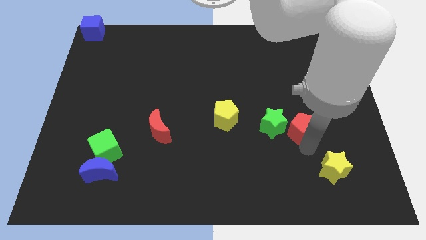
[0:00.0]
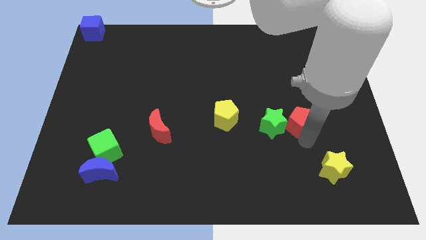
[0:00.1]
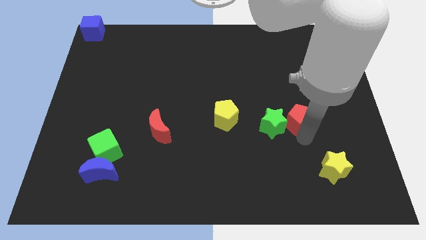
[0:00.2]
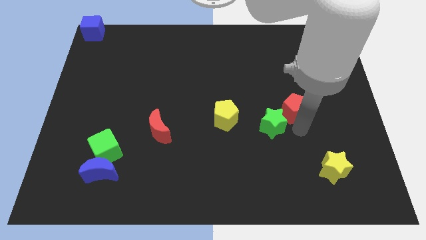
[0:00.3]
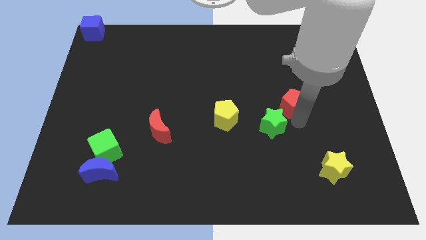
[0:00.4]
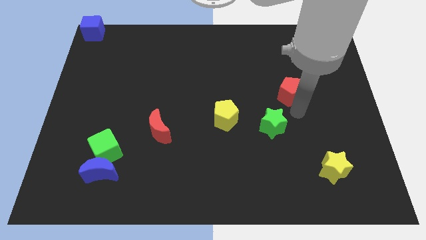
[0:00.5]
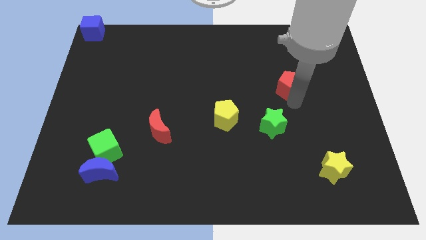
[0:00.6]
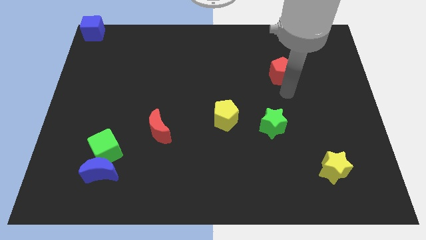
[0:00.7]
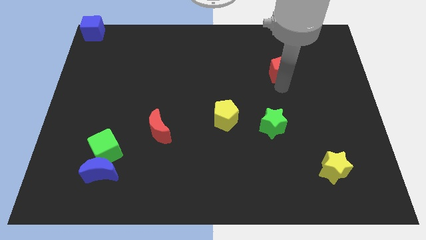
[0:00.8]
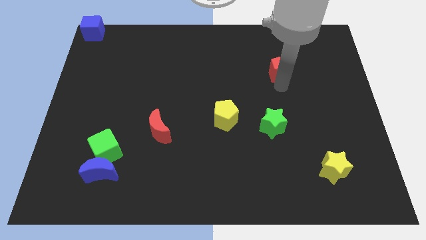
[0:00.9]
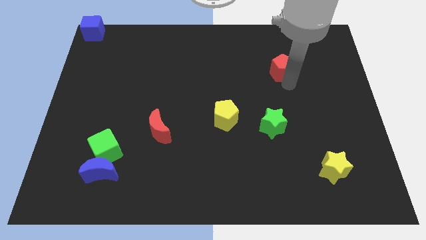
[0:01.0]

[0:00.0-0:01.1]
slide the red pentagon slightly upwards

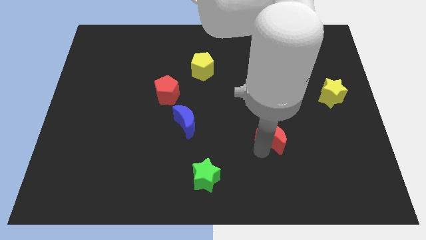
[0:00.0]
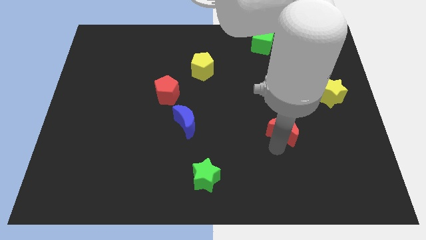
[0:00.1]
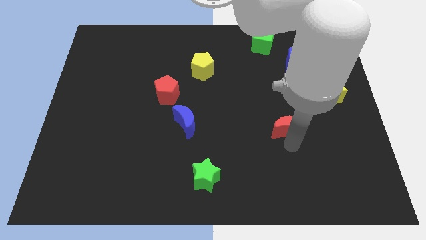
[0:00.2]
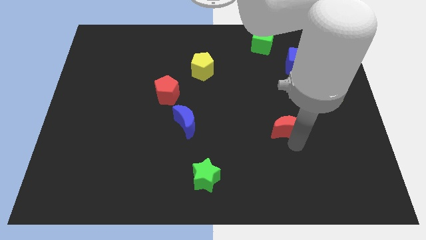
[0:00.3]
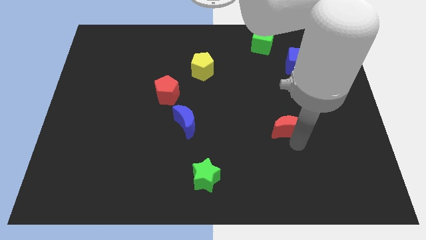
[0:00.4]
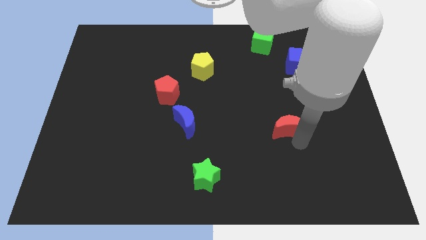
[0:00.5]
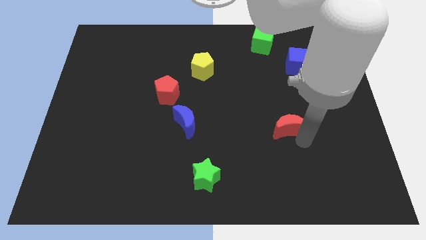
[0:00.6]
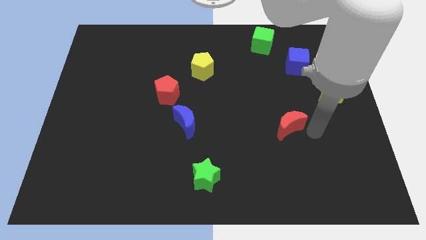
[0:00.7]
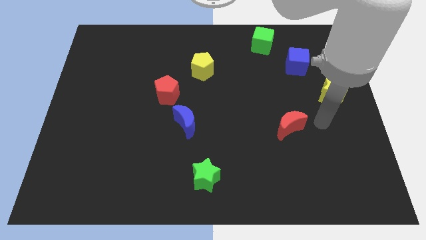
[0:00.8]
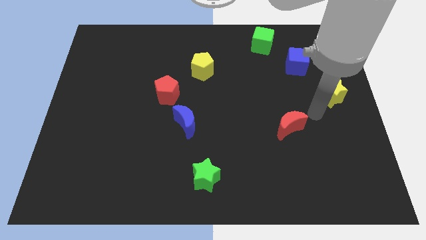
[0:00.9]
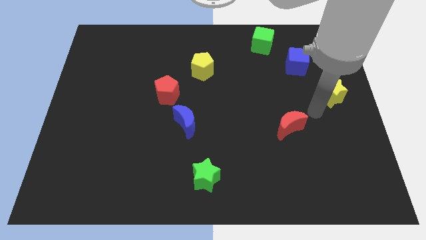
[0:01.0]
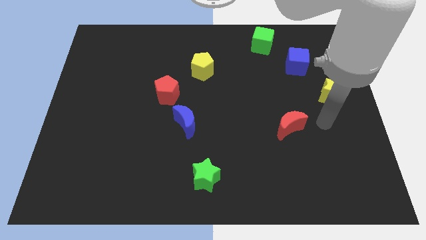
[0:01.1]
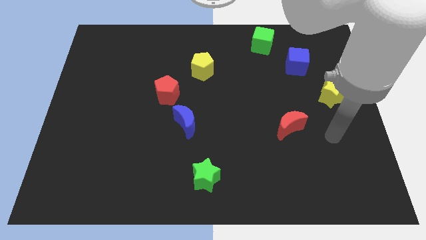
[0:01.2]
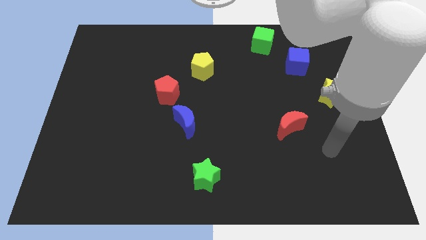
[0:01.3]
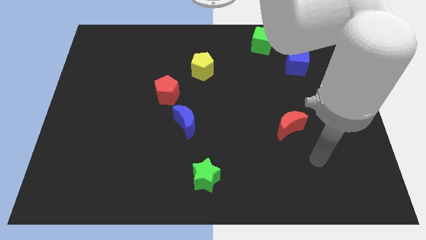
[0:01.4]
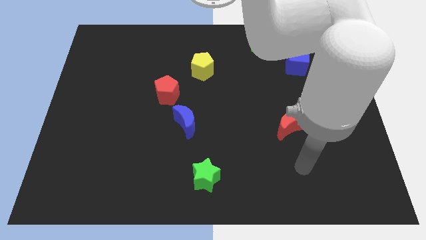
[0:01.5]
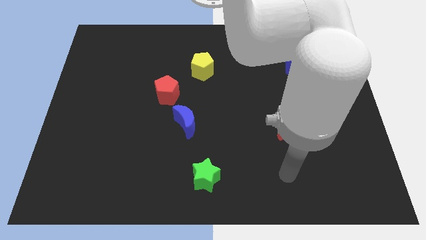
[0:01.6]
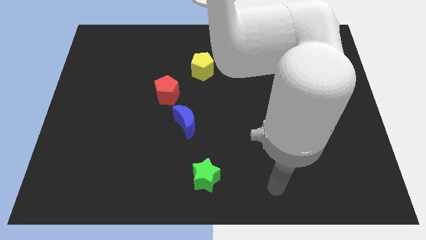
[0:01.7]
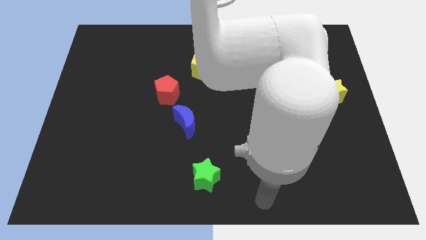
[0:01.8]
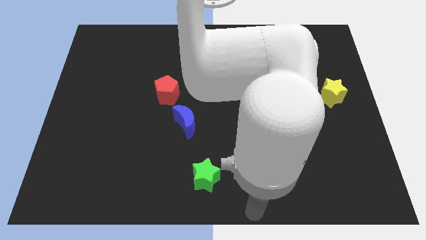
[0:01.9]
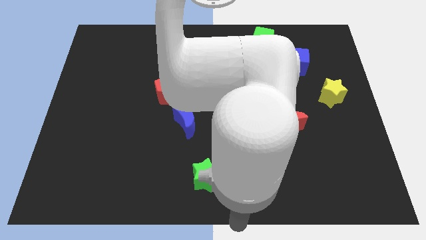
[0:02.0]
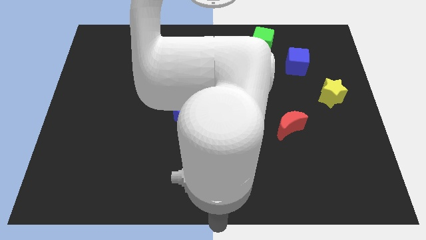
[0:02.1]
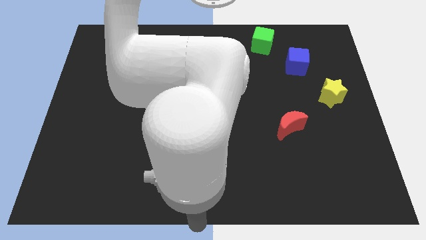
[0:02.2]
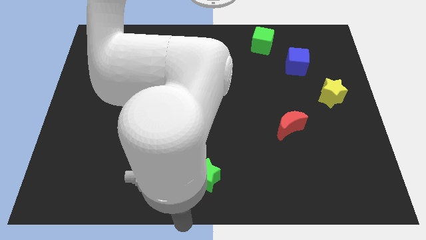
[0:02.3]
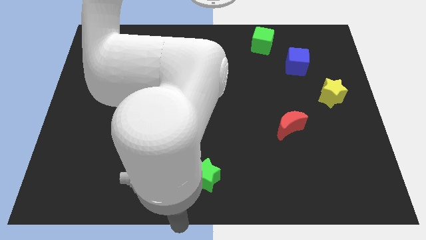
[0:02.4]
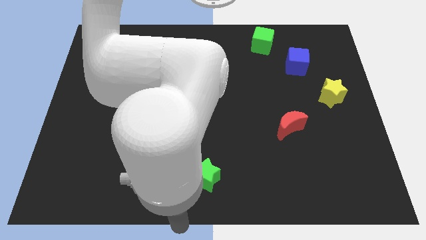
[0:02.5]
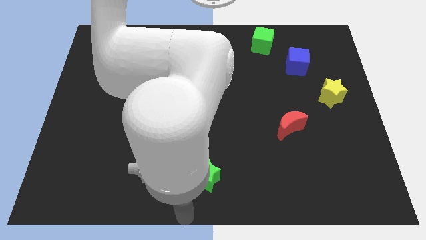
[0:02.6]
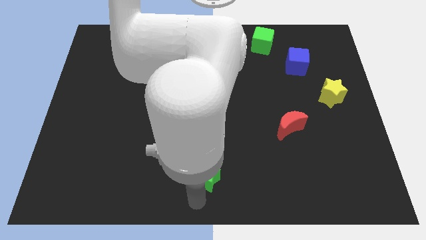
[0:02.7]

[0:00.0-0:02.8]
slightly move the red crescent to the left of the board

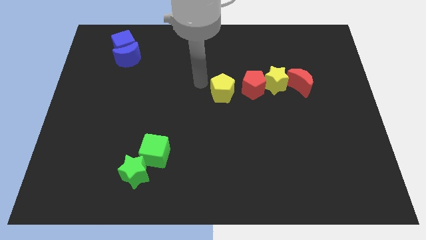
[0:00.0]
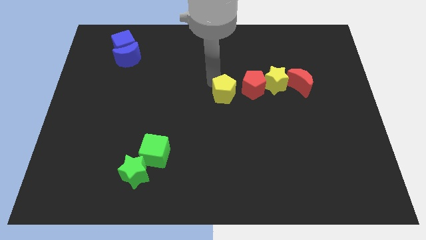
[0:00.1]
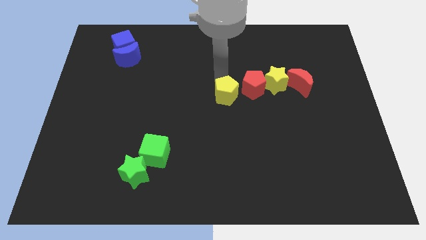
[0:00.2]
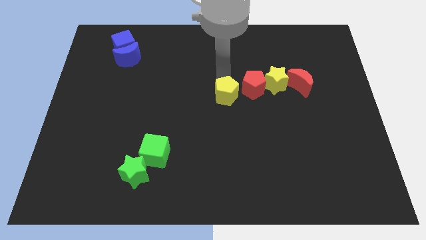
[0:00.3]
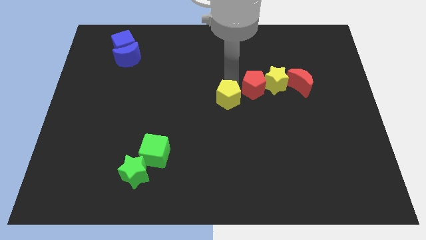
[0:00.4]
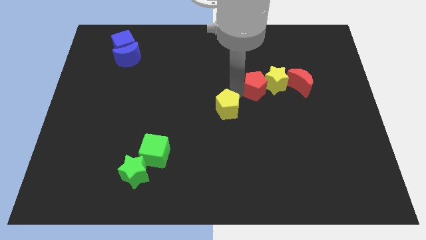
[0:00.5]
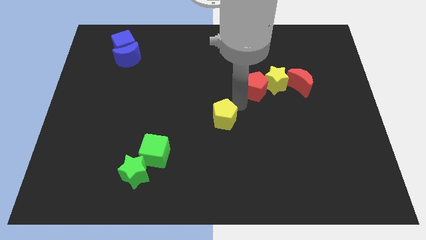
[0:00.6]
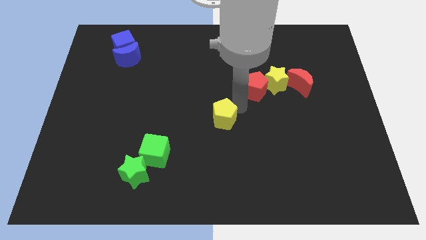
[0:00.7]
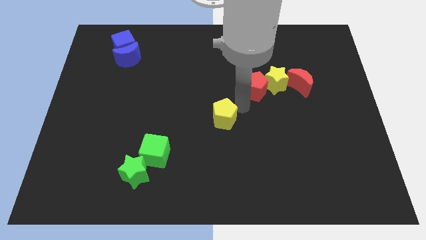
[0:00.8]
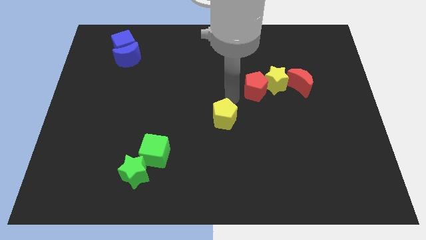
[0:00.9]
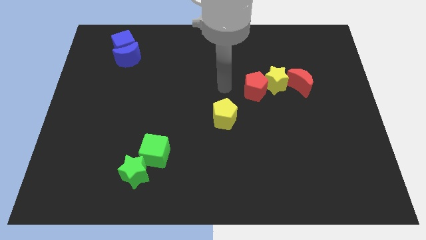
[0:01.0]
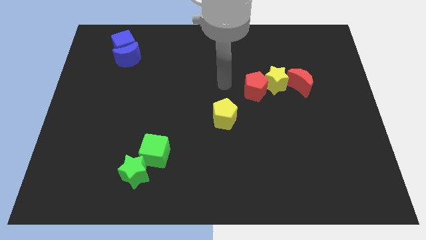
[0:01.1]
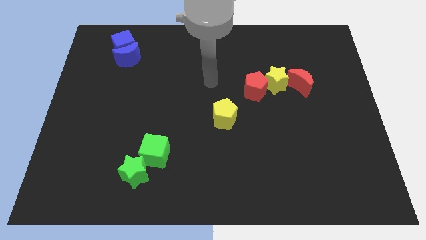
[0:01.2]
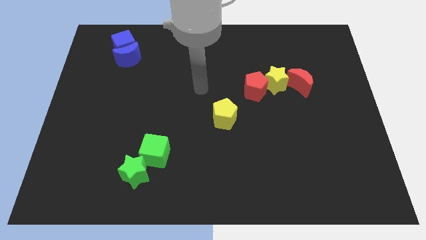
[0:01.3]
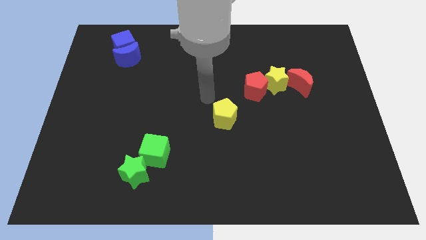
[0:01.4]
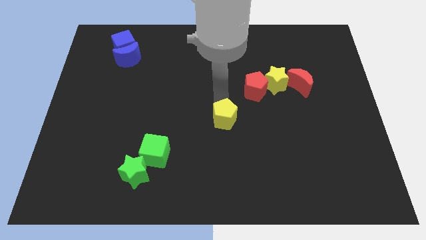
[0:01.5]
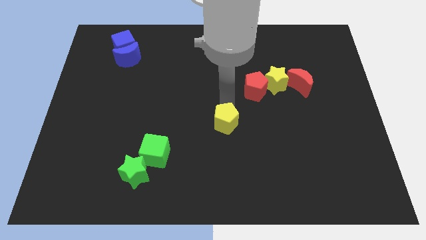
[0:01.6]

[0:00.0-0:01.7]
place the yellow pentagon to the center of the board

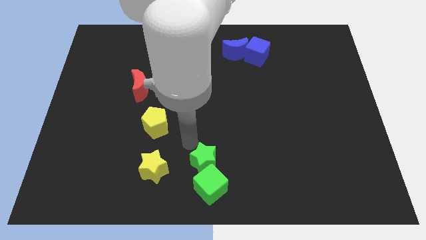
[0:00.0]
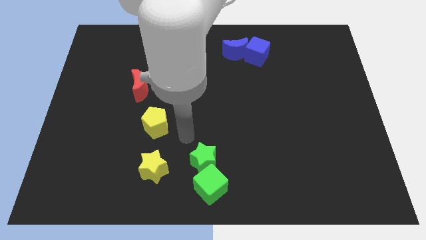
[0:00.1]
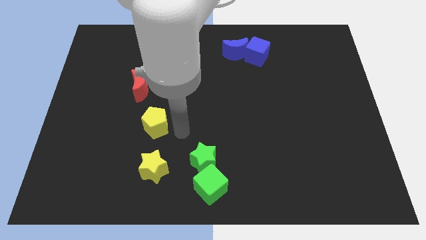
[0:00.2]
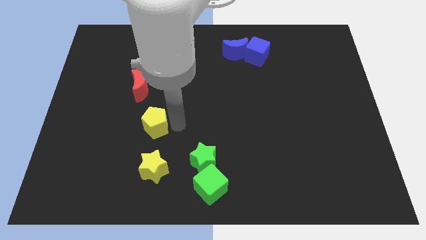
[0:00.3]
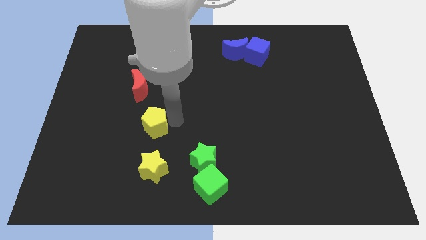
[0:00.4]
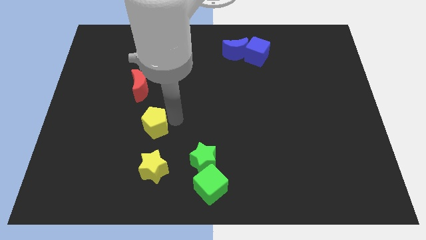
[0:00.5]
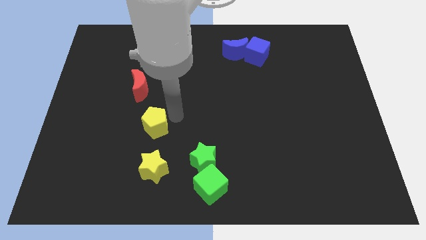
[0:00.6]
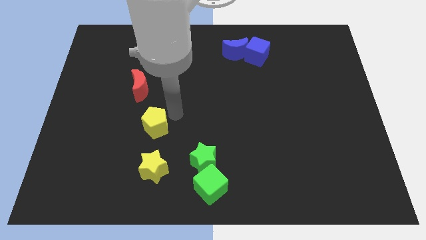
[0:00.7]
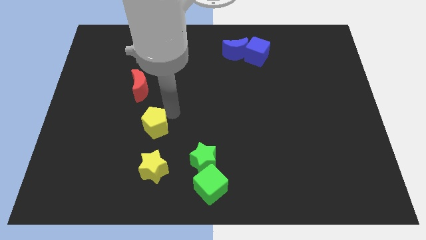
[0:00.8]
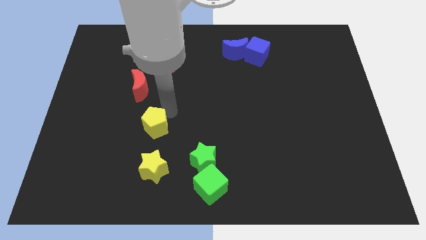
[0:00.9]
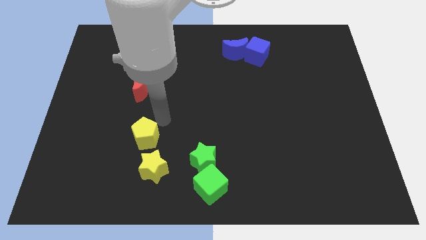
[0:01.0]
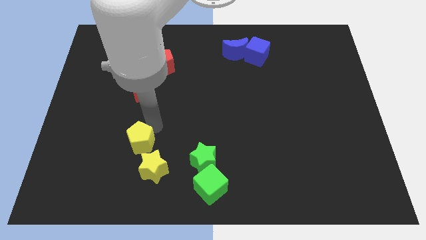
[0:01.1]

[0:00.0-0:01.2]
move the yellow pentagon to the top left side of the yellow star

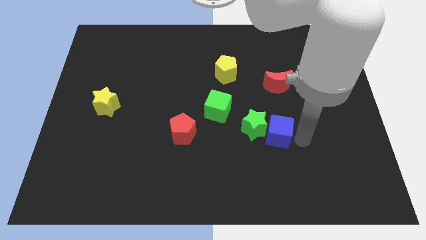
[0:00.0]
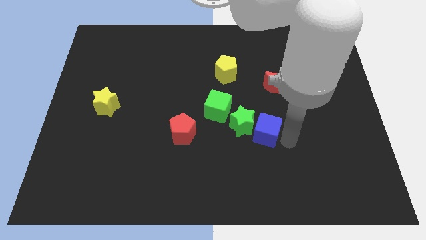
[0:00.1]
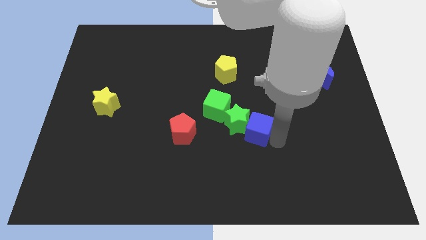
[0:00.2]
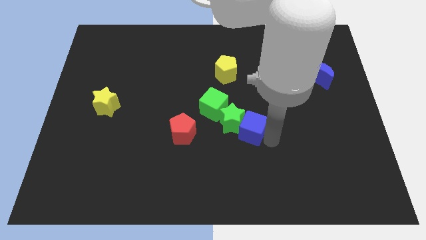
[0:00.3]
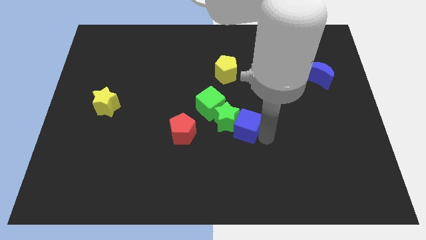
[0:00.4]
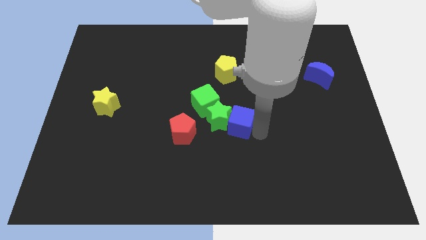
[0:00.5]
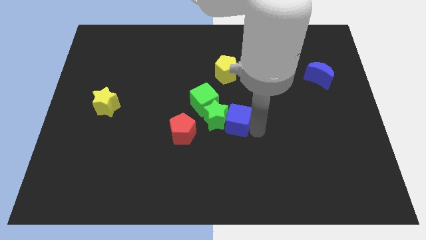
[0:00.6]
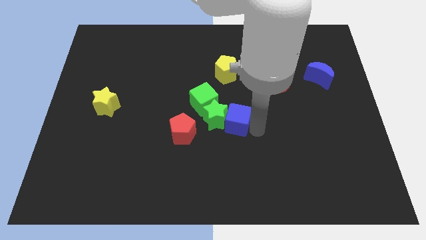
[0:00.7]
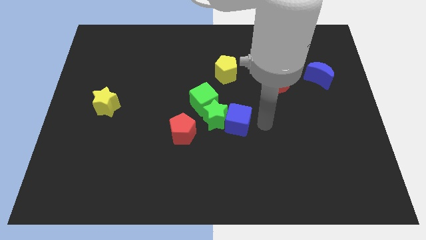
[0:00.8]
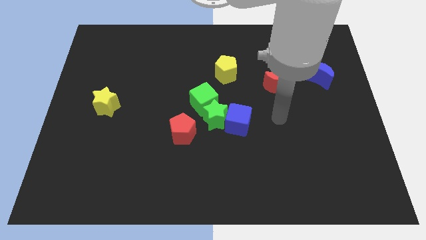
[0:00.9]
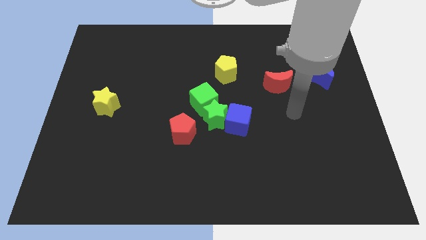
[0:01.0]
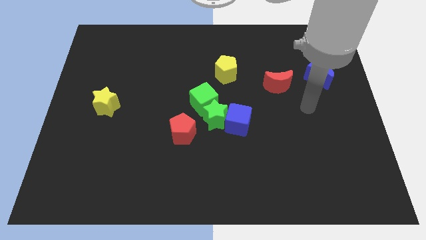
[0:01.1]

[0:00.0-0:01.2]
push the green blocks and blue cube to the center of the board

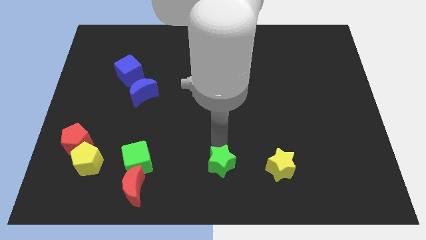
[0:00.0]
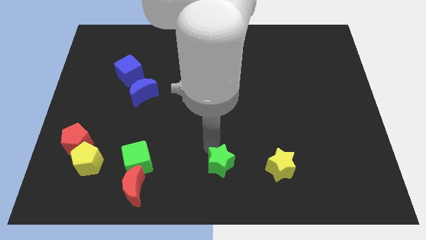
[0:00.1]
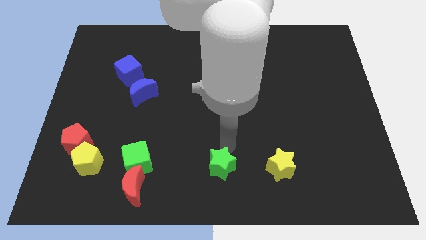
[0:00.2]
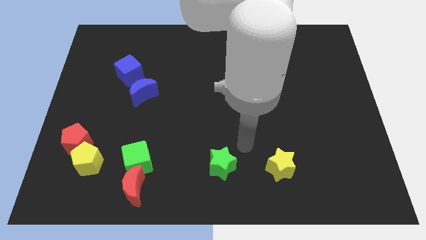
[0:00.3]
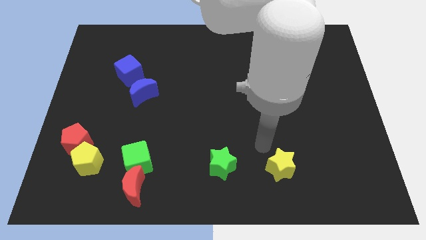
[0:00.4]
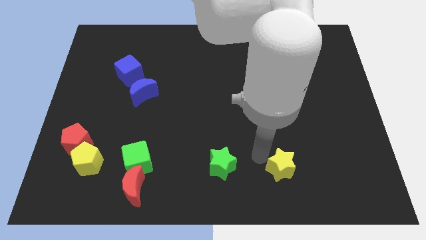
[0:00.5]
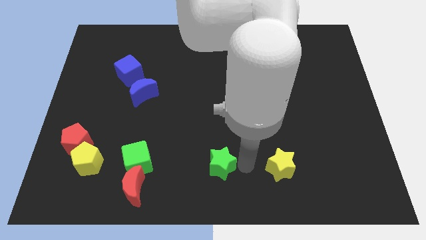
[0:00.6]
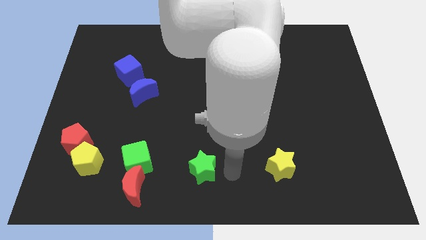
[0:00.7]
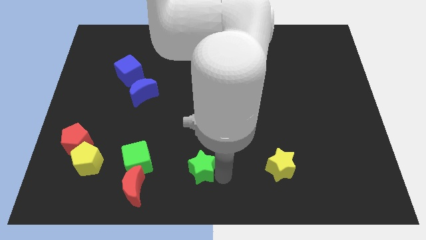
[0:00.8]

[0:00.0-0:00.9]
place green star in between green cube and yellow star

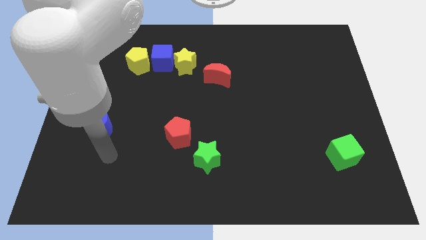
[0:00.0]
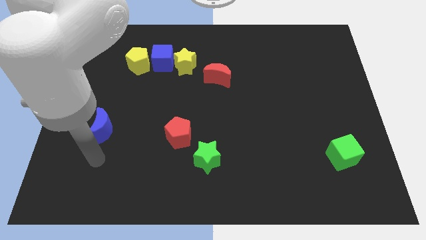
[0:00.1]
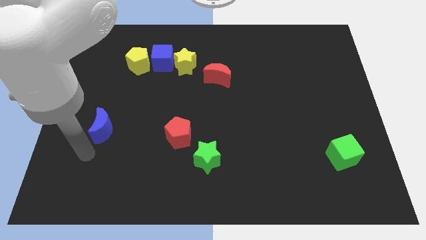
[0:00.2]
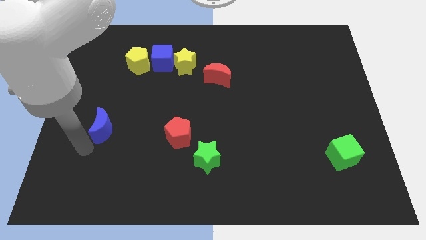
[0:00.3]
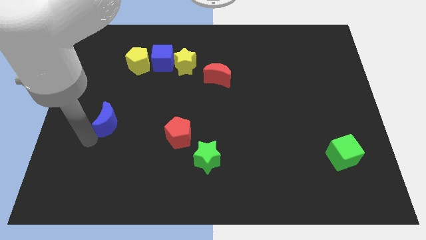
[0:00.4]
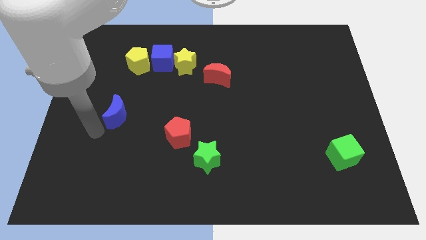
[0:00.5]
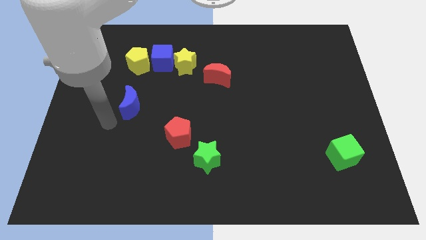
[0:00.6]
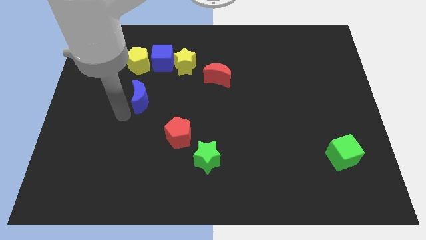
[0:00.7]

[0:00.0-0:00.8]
place blue moon vertical to yellow pentagon
